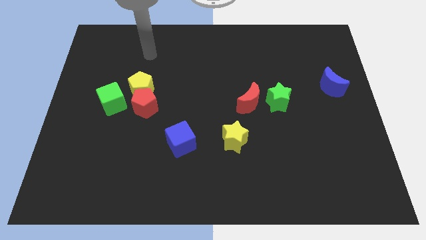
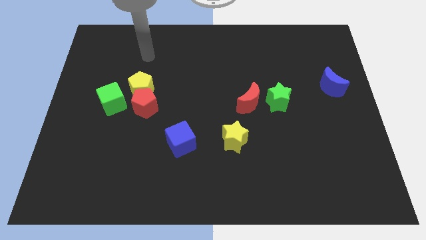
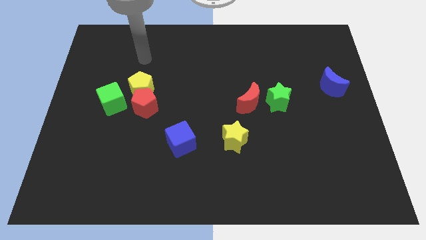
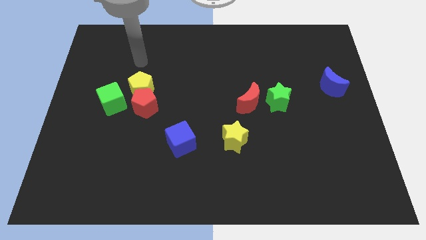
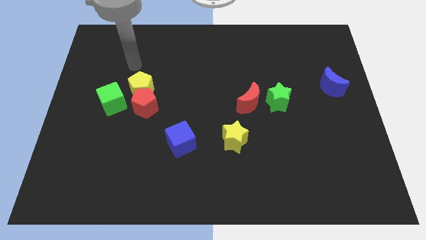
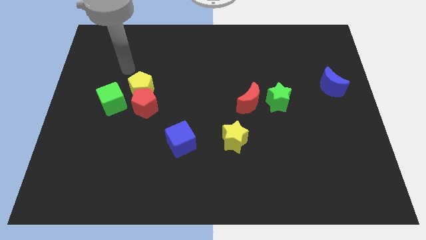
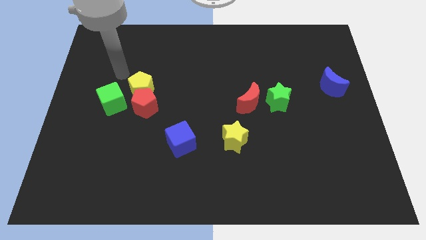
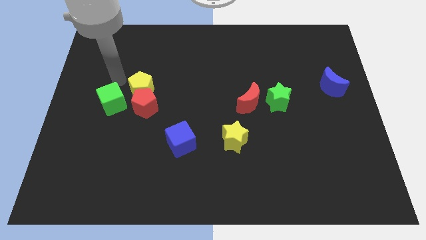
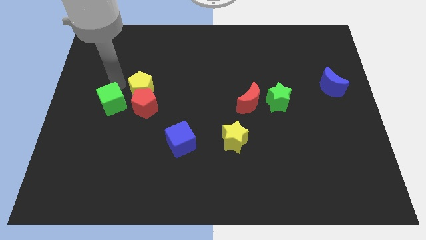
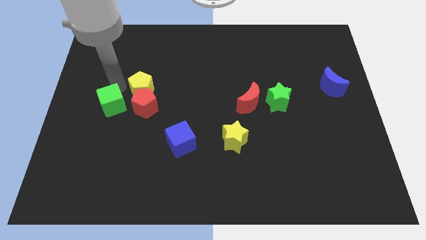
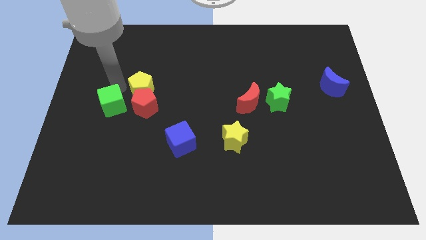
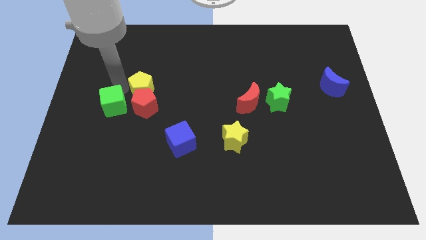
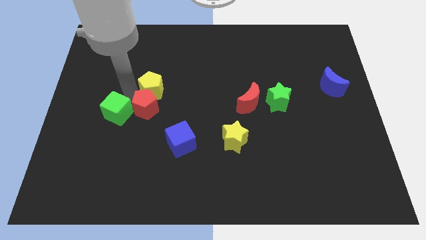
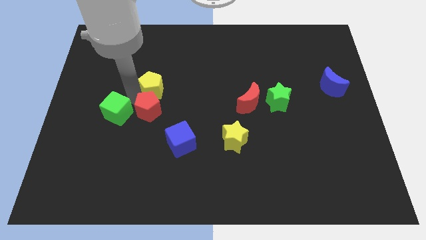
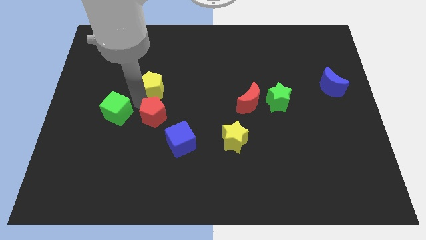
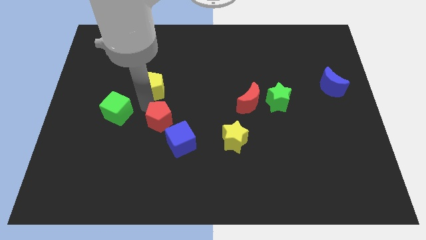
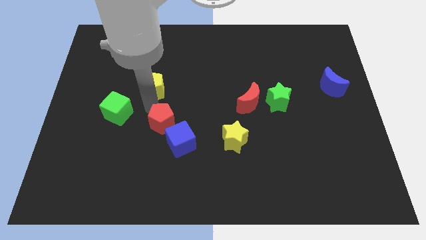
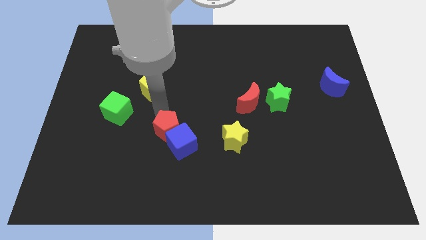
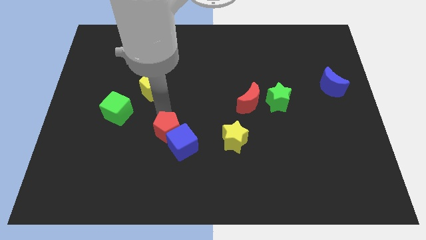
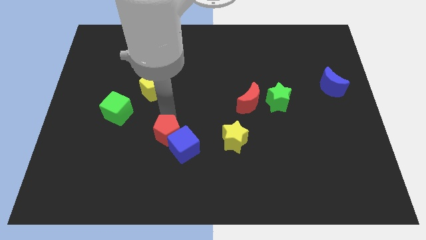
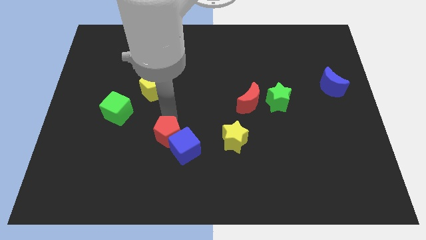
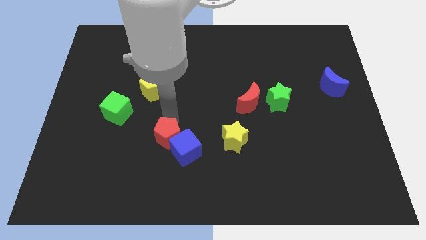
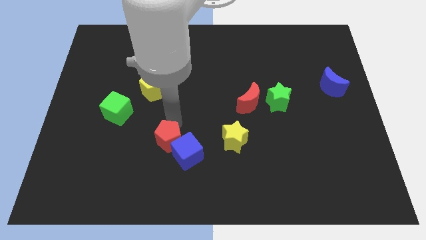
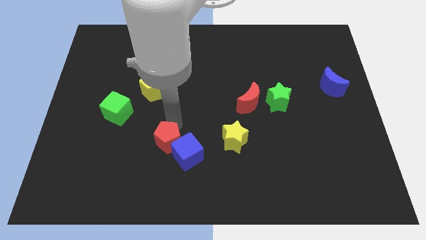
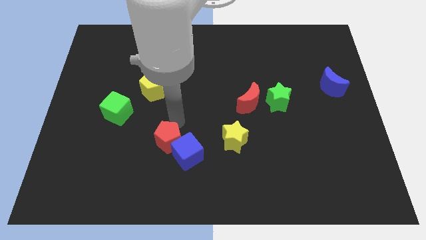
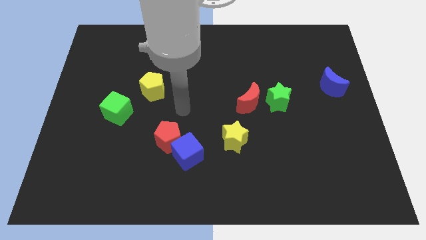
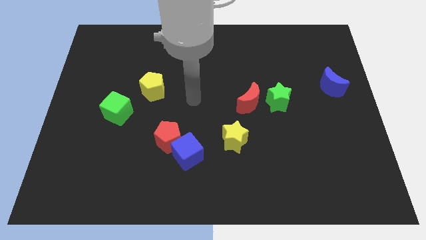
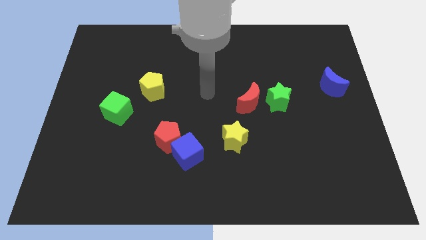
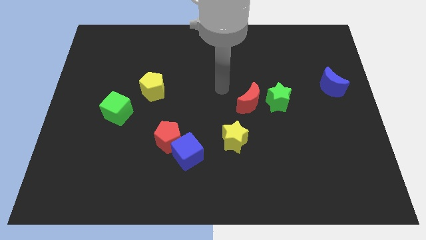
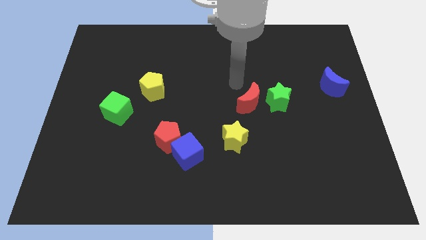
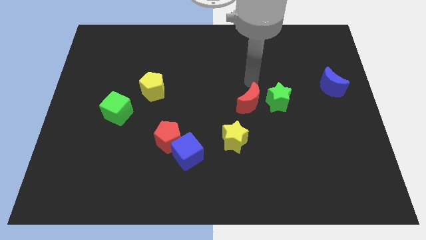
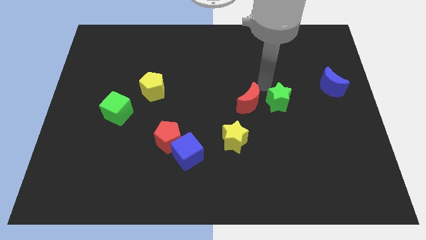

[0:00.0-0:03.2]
push the red pentagon into the blue cube

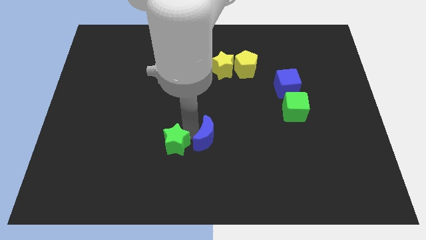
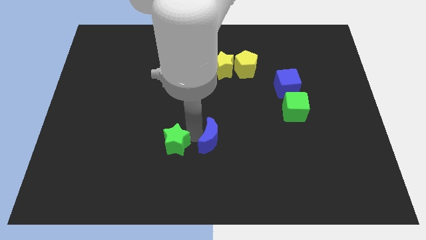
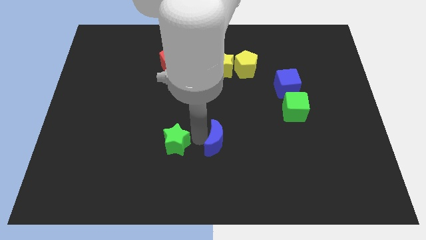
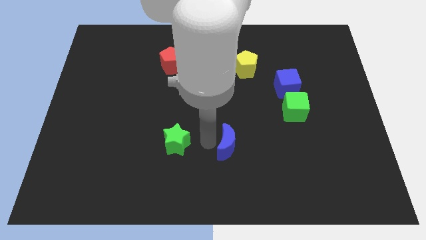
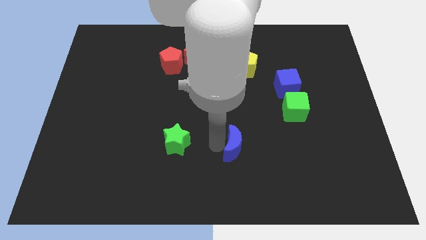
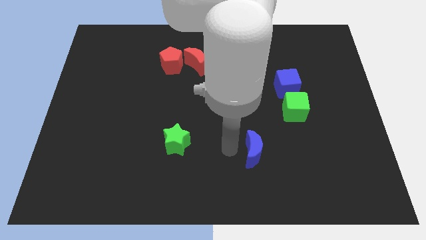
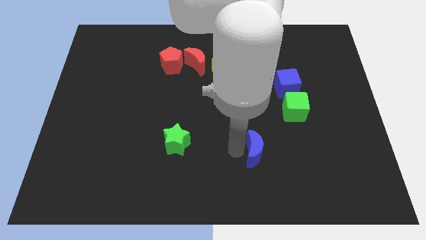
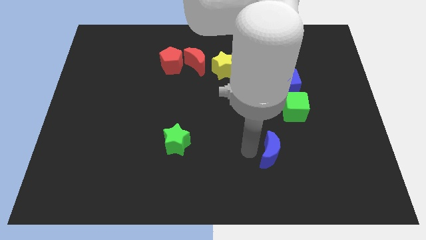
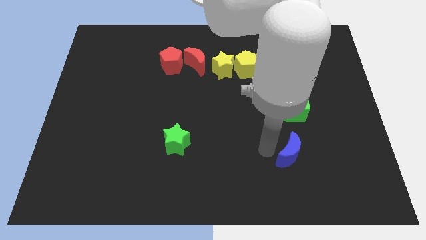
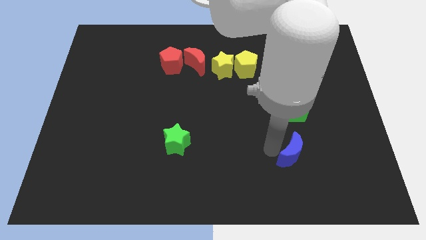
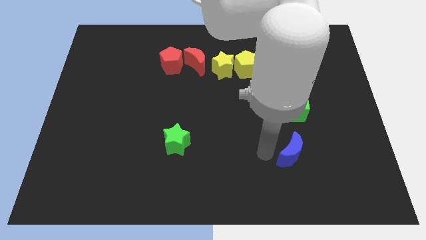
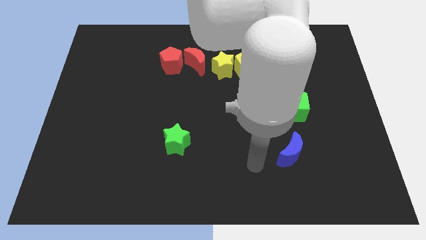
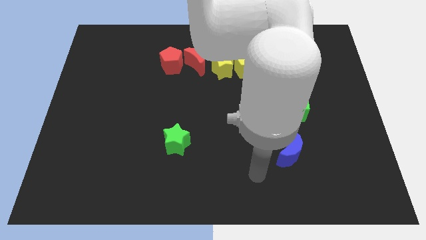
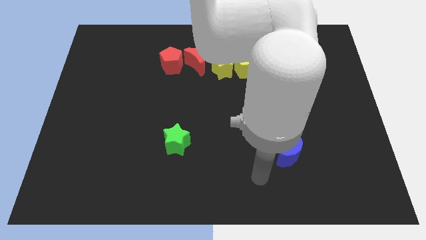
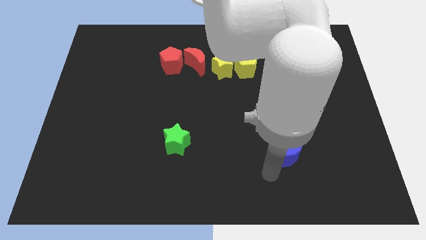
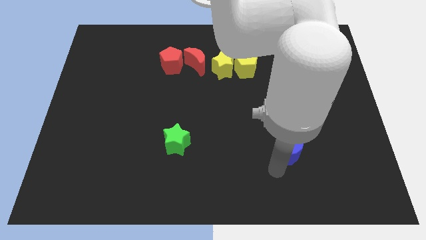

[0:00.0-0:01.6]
move blue crescent towards the green cube

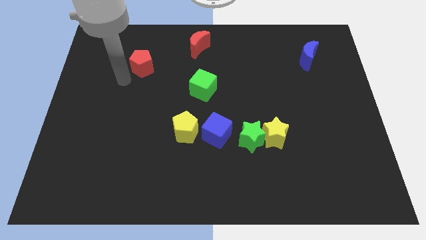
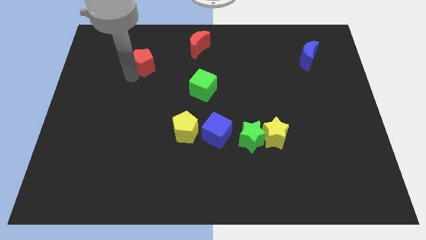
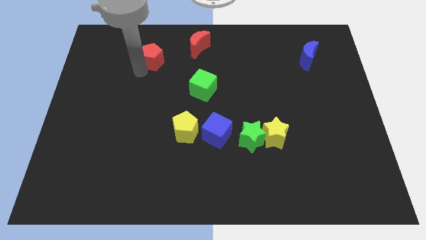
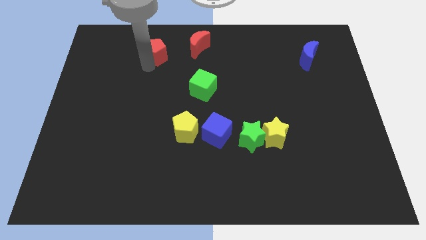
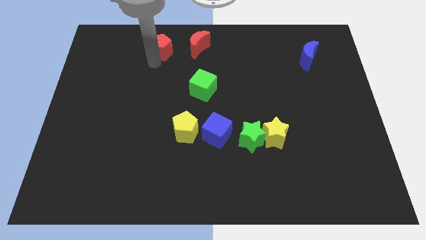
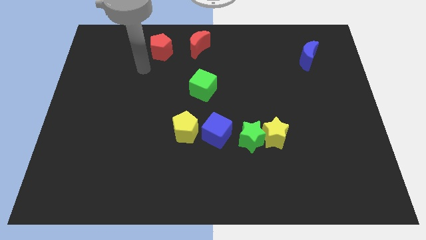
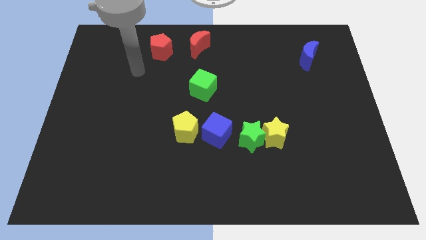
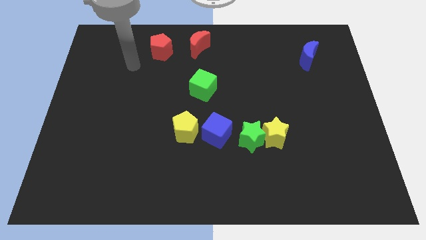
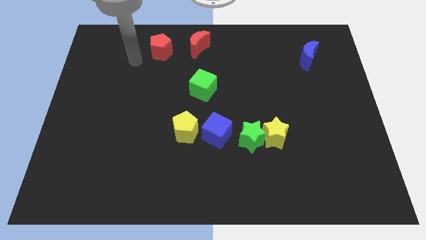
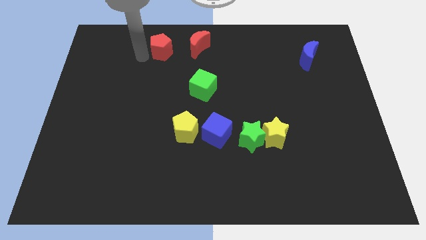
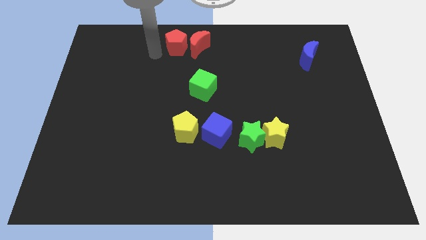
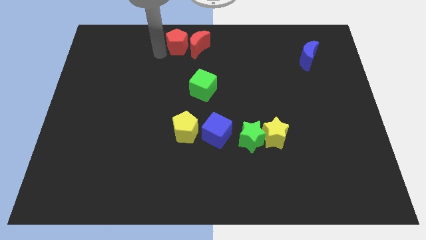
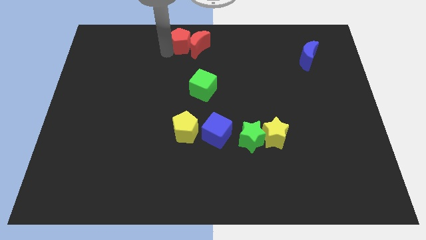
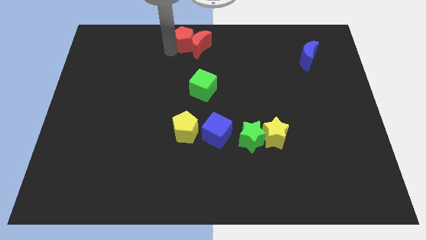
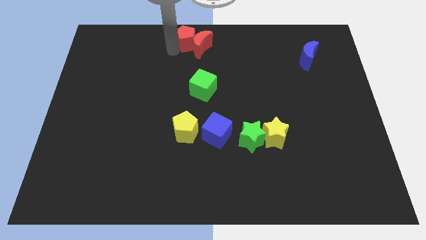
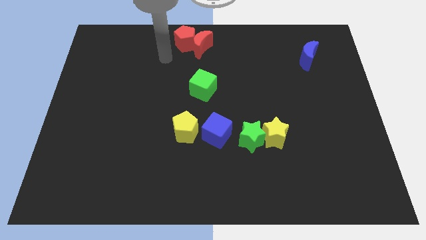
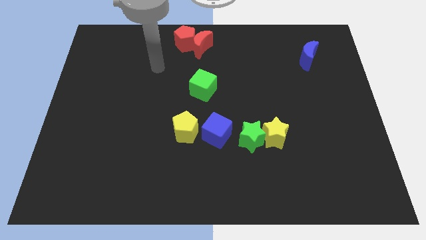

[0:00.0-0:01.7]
move the red pentagon into the red crescent

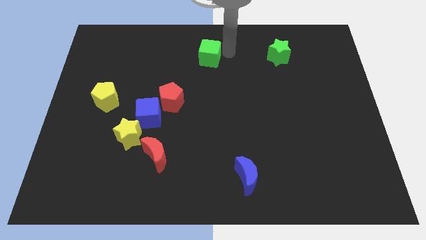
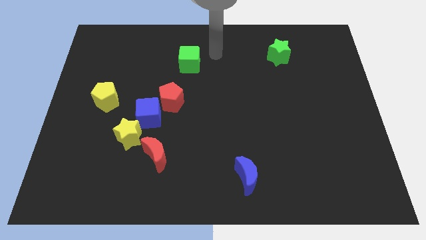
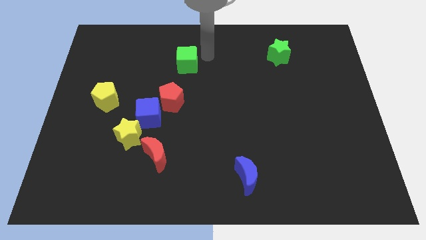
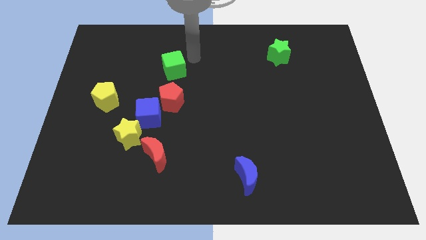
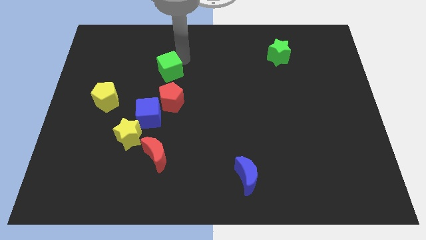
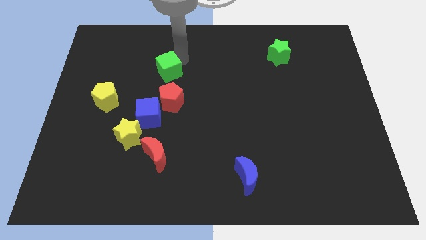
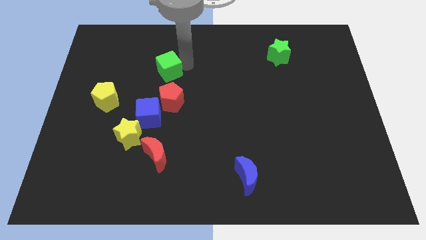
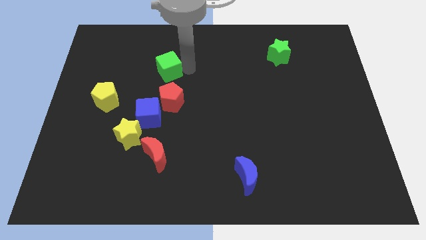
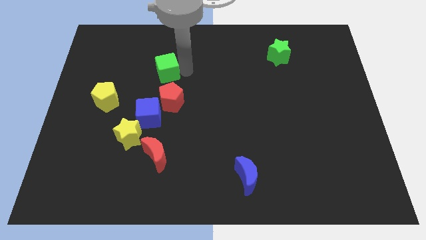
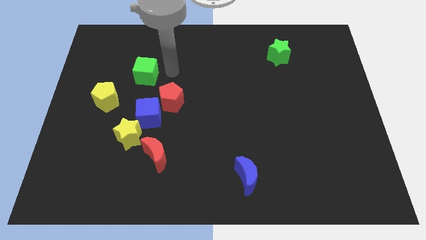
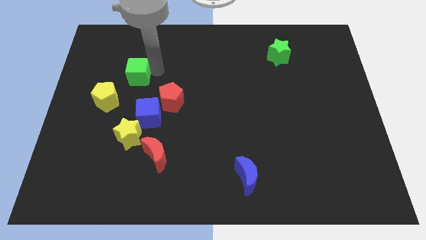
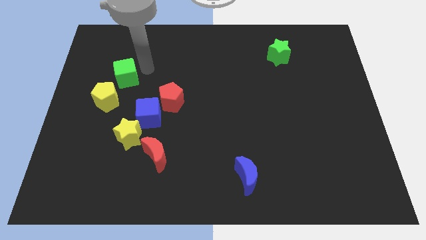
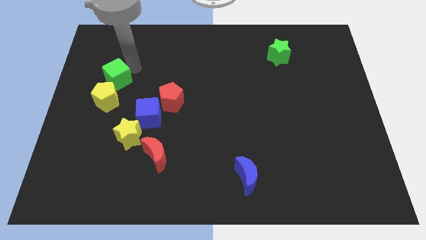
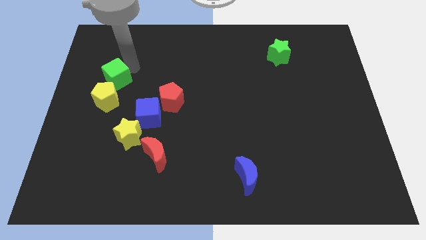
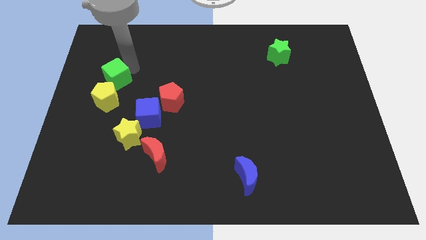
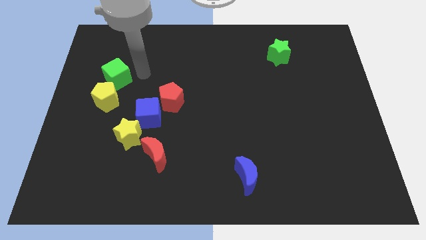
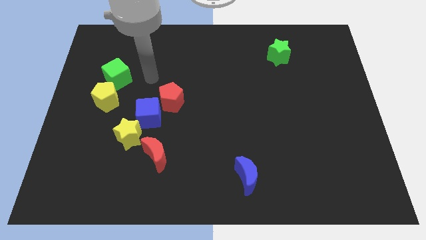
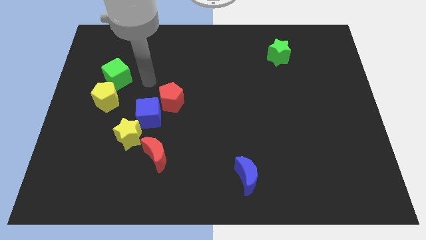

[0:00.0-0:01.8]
place the green cube above the yellow pentagon

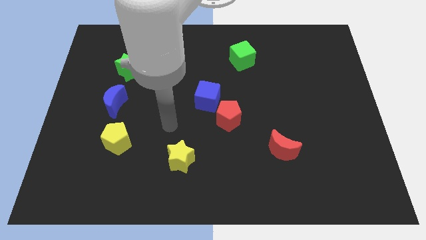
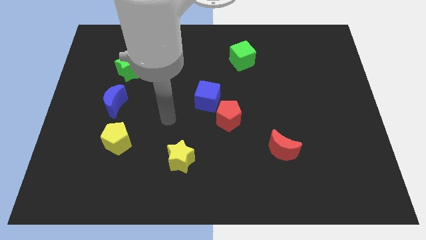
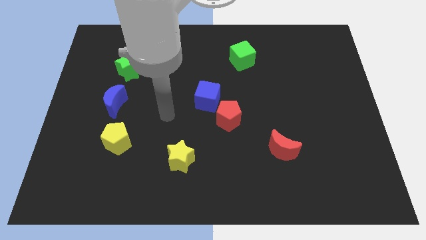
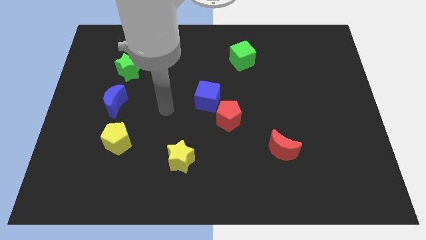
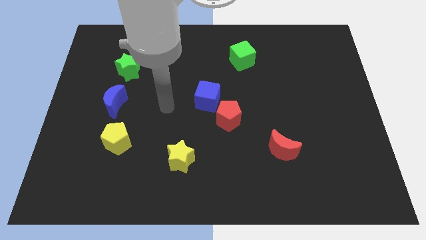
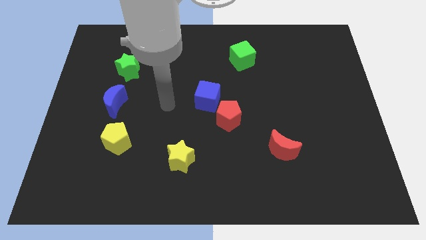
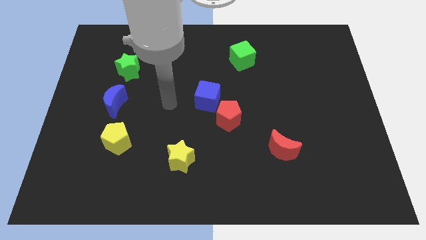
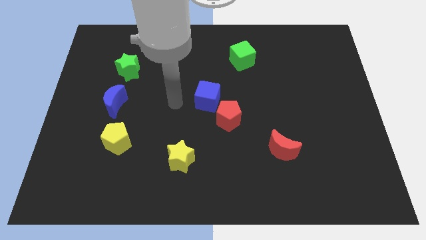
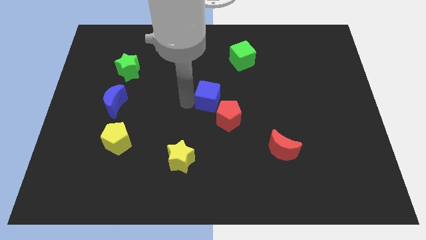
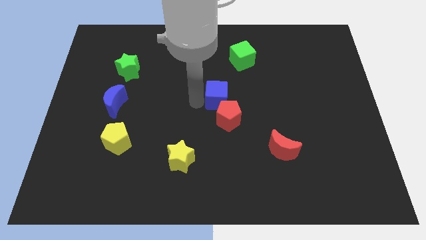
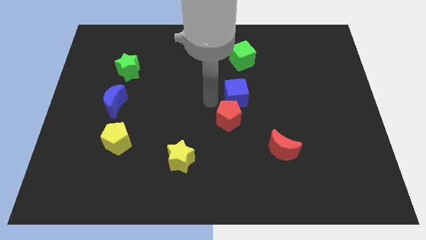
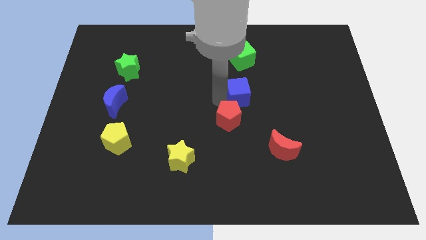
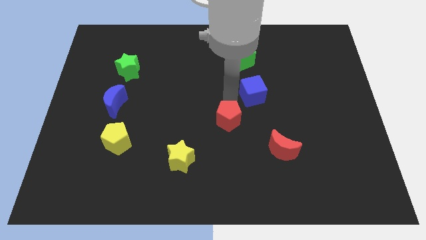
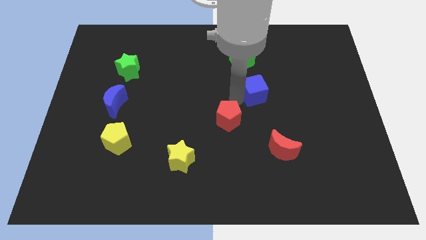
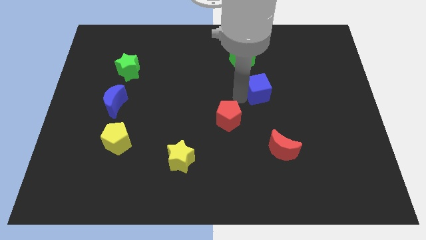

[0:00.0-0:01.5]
move the blue cube to the right of the board
